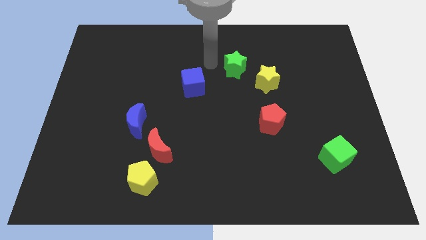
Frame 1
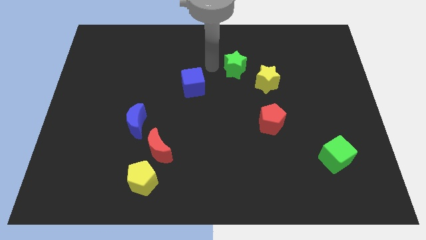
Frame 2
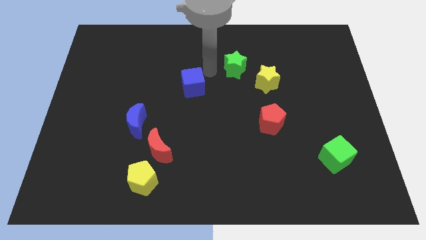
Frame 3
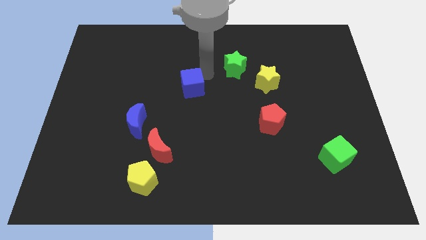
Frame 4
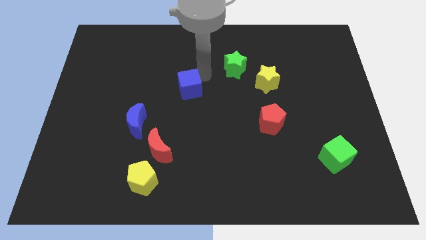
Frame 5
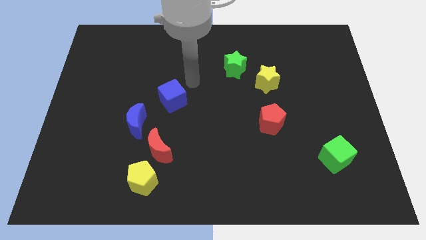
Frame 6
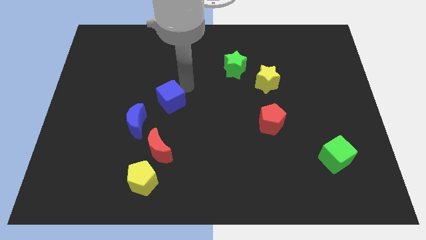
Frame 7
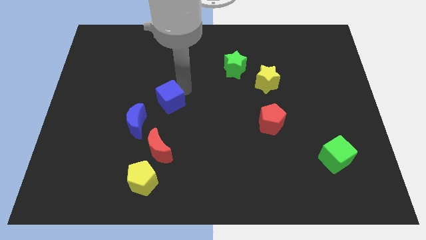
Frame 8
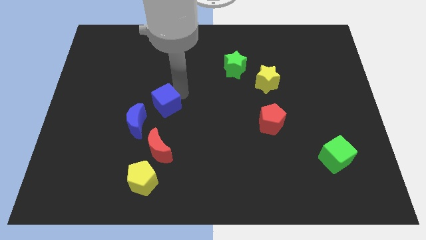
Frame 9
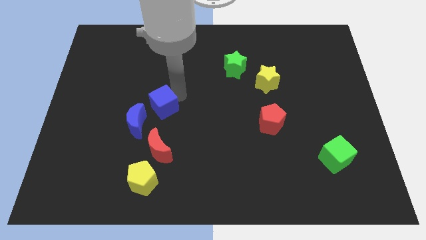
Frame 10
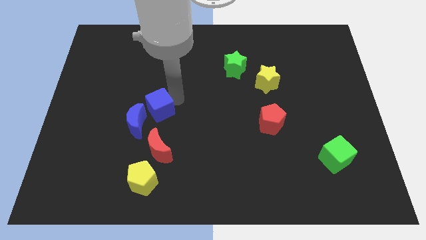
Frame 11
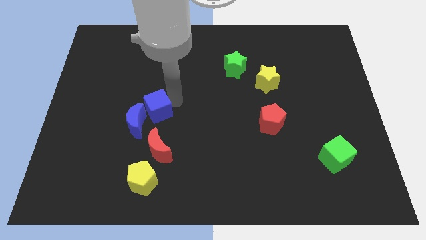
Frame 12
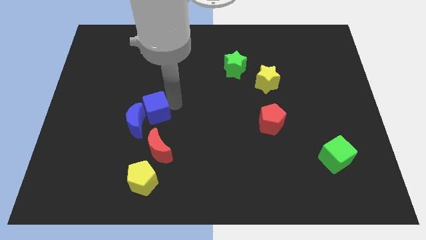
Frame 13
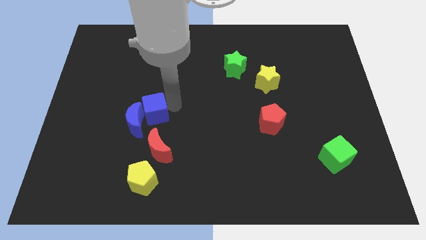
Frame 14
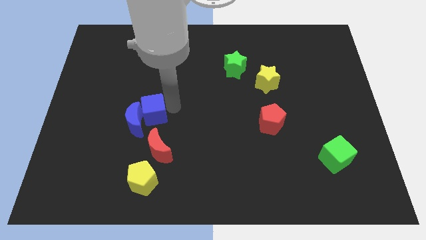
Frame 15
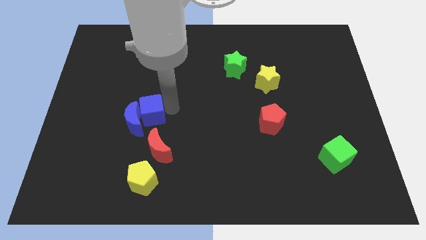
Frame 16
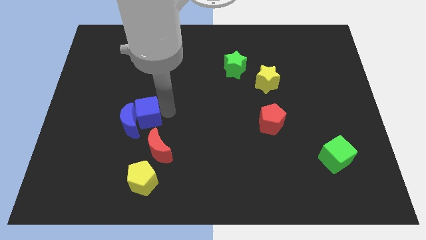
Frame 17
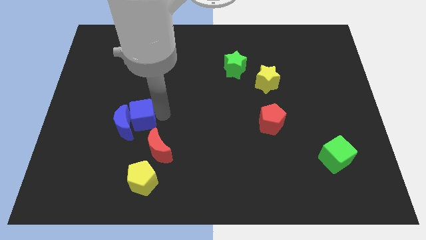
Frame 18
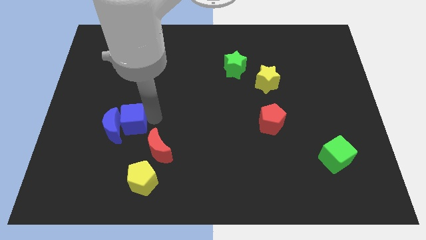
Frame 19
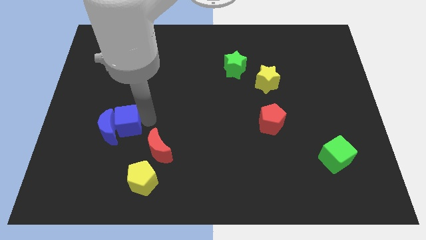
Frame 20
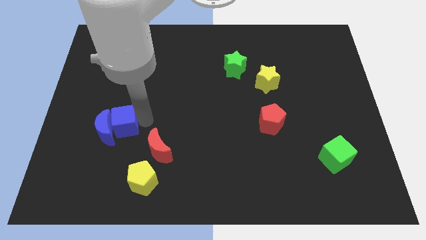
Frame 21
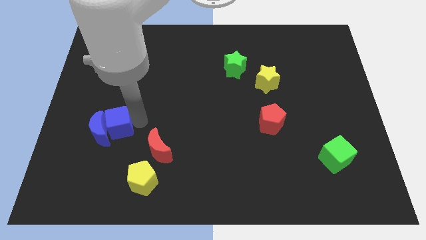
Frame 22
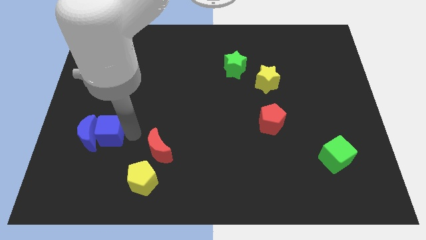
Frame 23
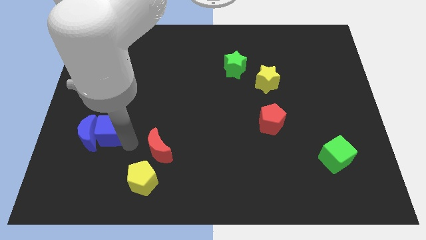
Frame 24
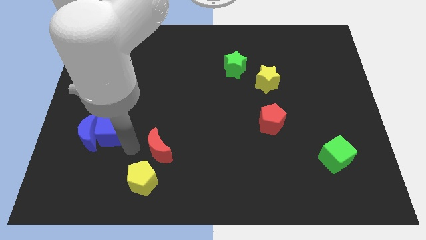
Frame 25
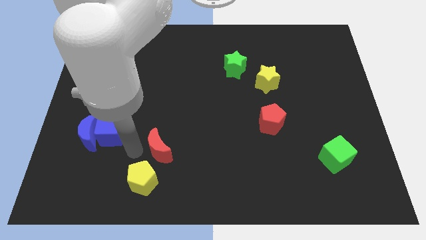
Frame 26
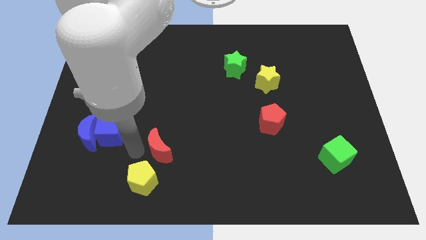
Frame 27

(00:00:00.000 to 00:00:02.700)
push the blue cube into the blue crescent

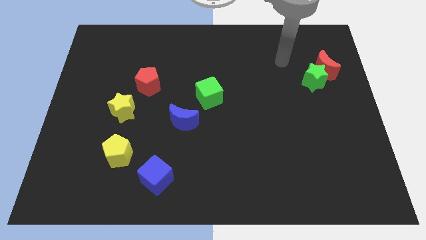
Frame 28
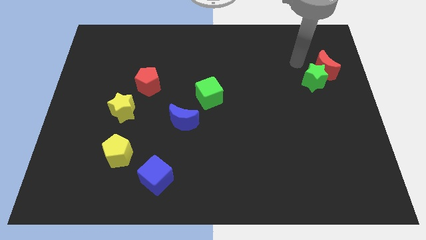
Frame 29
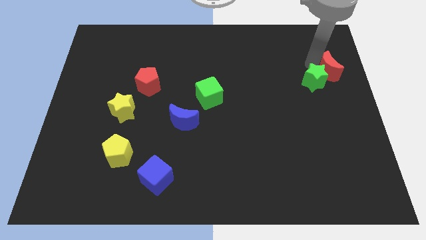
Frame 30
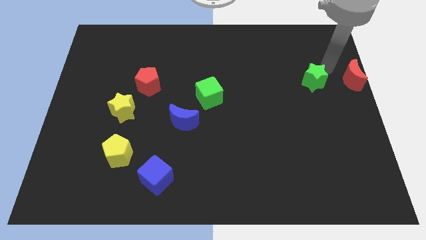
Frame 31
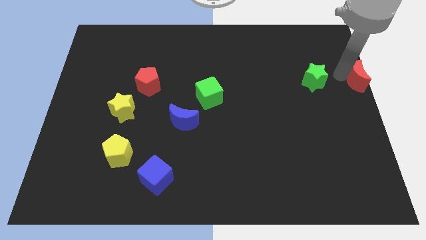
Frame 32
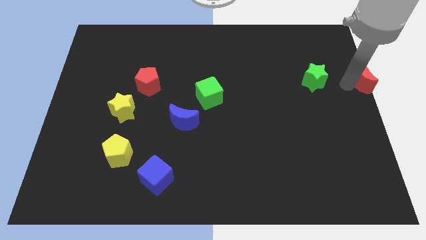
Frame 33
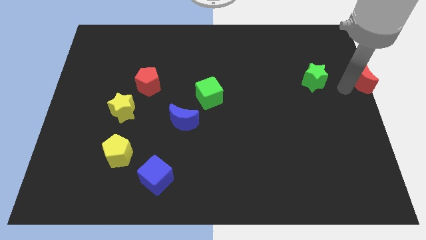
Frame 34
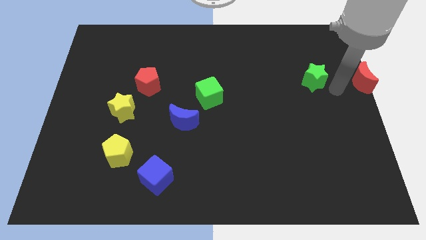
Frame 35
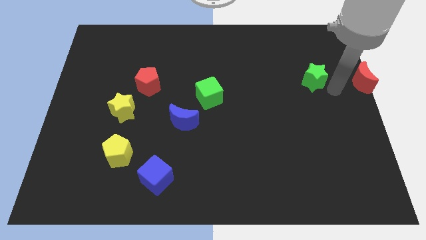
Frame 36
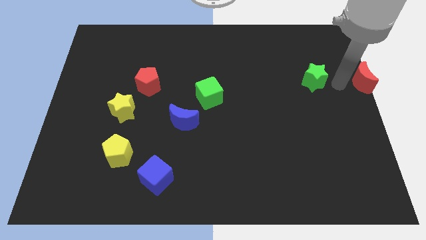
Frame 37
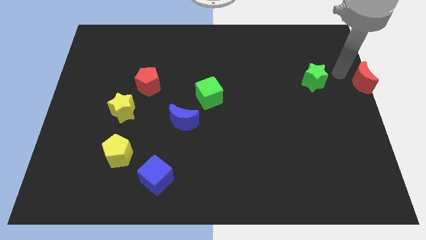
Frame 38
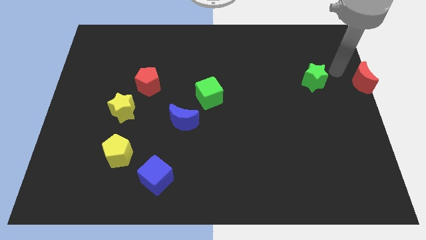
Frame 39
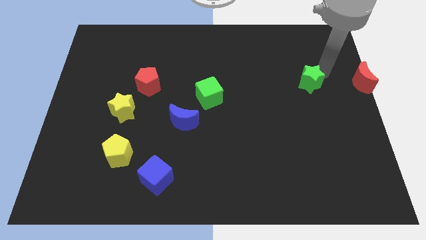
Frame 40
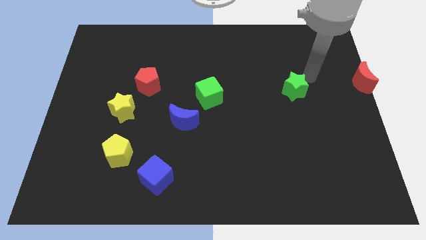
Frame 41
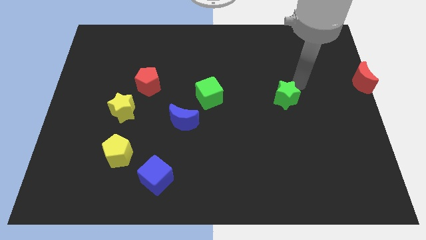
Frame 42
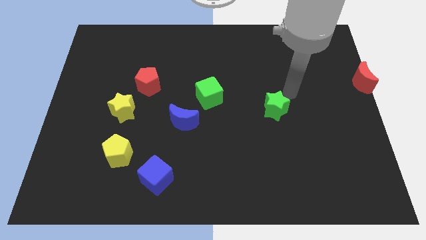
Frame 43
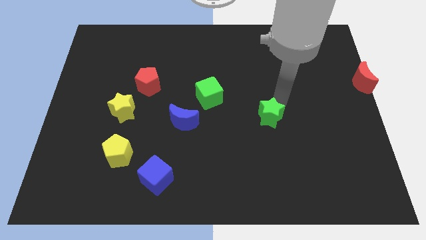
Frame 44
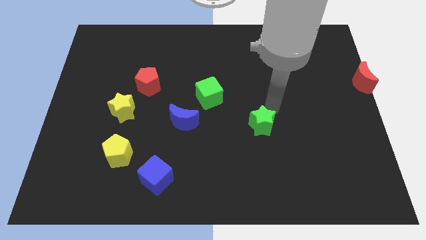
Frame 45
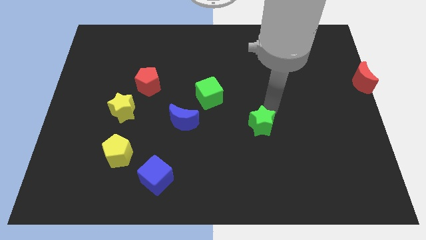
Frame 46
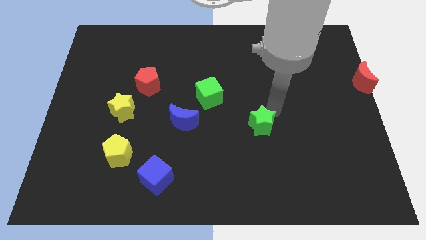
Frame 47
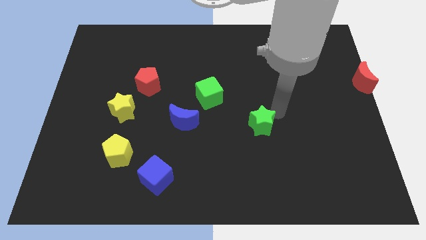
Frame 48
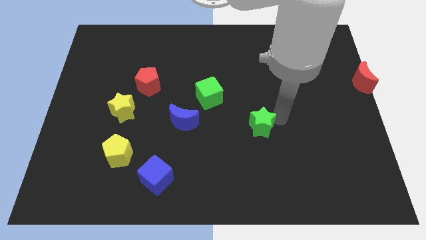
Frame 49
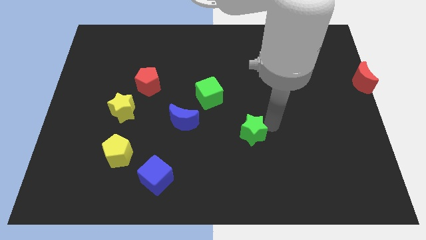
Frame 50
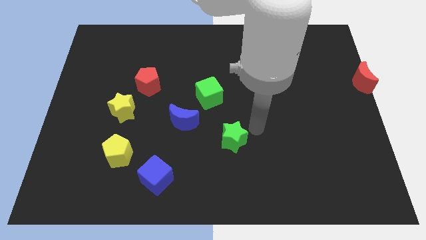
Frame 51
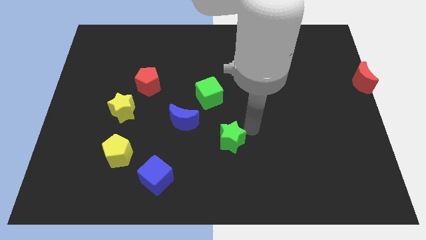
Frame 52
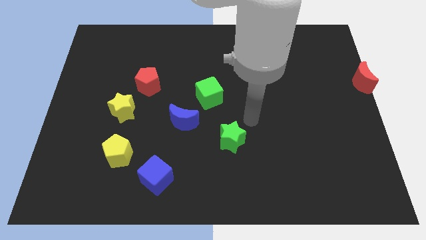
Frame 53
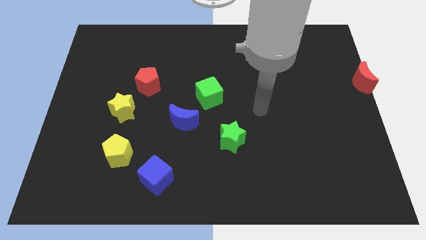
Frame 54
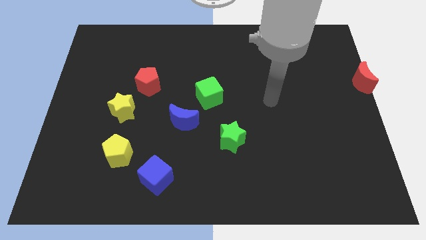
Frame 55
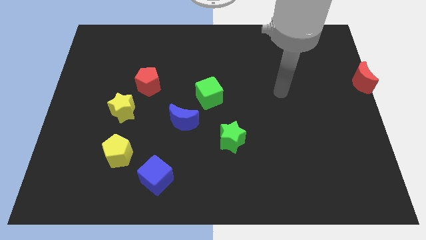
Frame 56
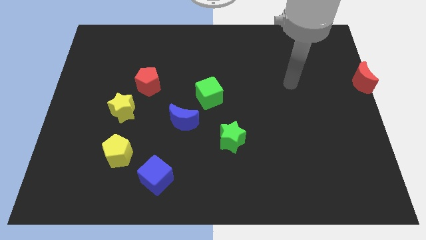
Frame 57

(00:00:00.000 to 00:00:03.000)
separate green star from red moon

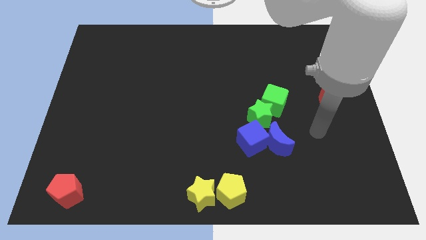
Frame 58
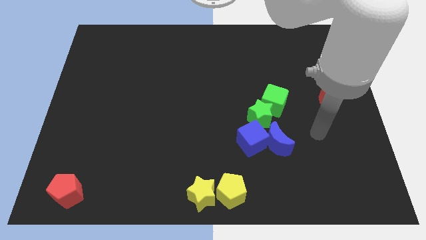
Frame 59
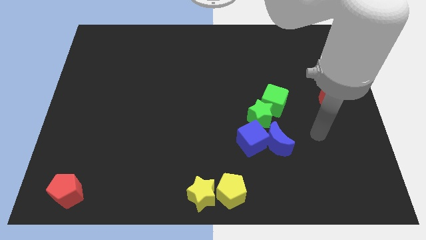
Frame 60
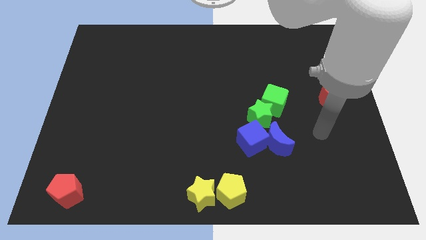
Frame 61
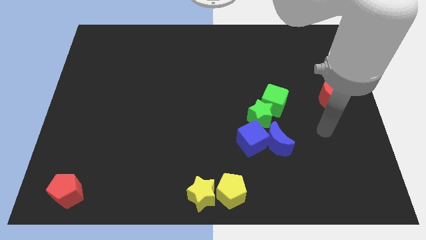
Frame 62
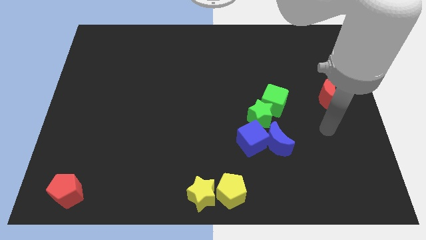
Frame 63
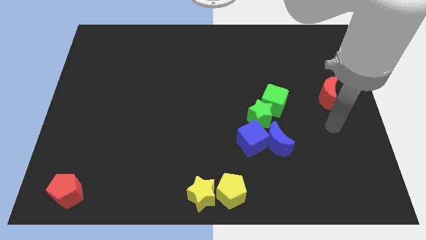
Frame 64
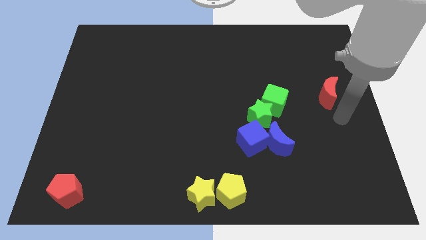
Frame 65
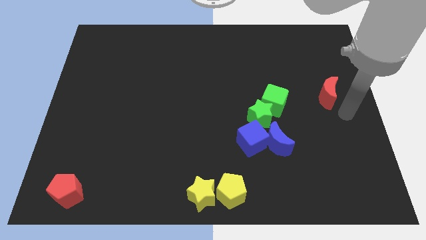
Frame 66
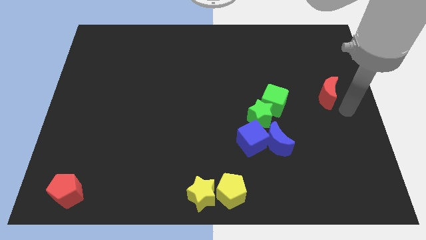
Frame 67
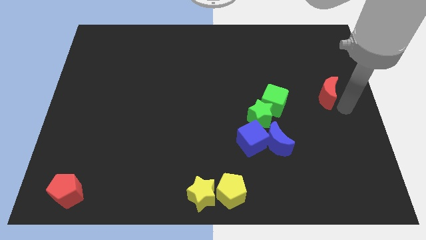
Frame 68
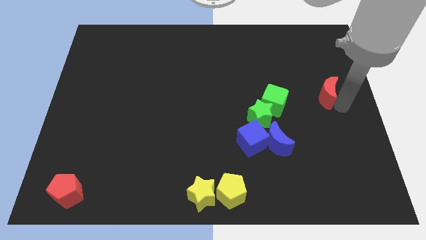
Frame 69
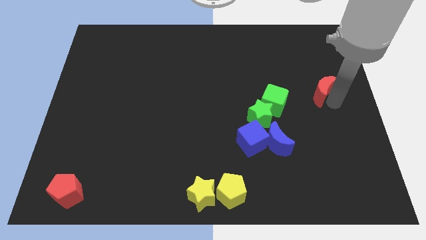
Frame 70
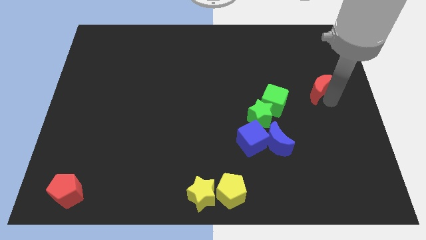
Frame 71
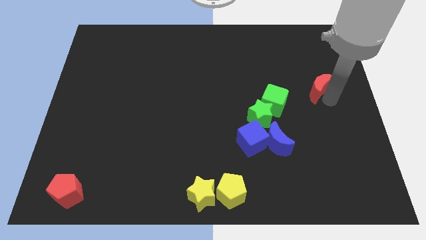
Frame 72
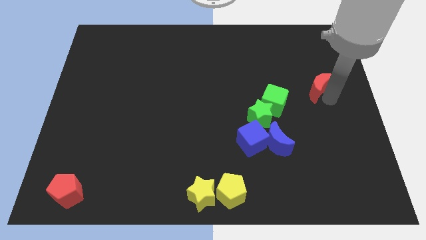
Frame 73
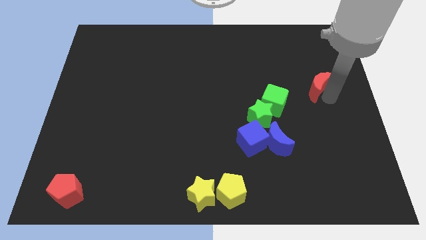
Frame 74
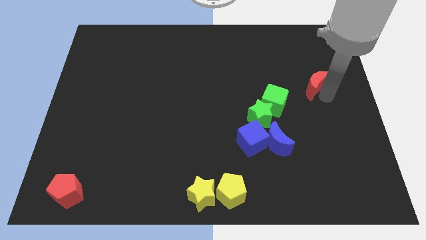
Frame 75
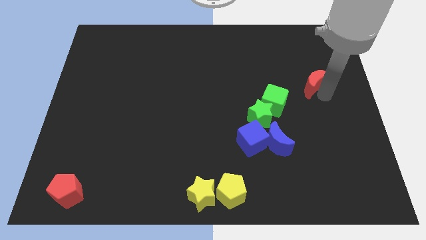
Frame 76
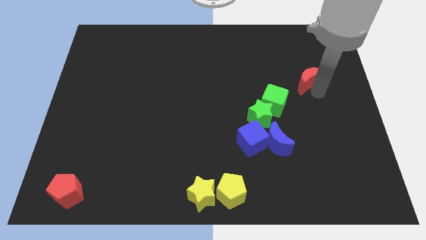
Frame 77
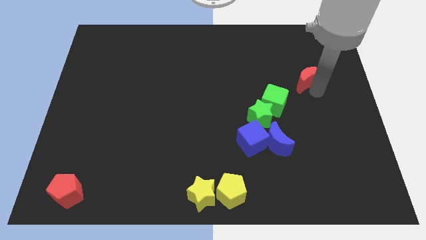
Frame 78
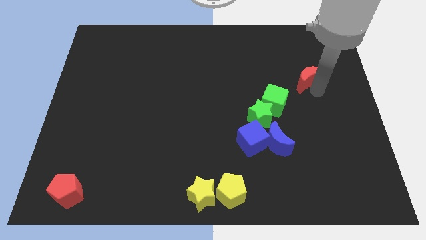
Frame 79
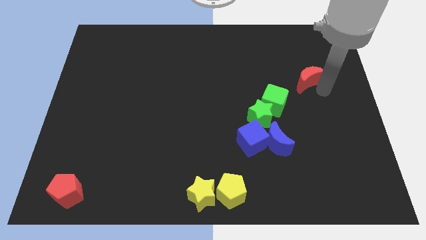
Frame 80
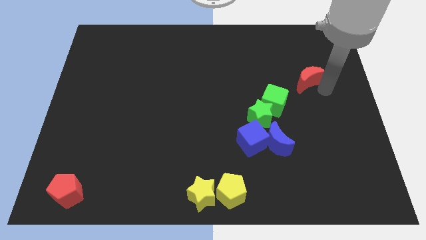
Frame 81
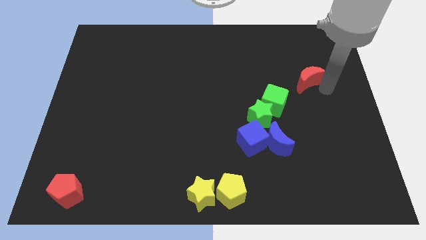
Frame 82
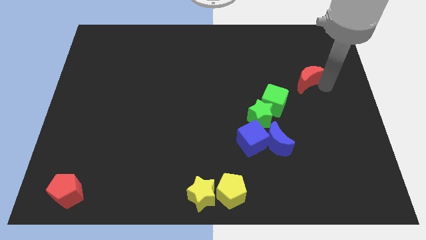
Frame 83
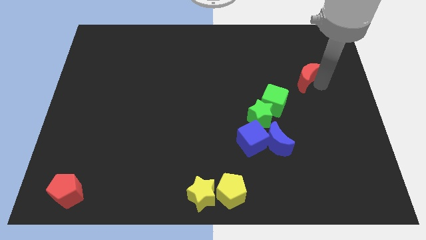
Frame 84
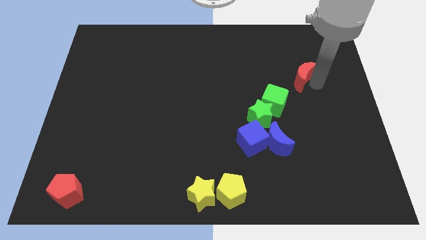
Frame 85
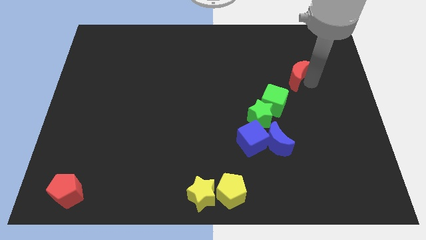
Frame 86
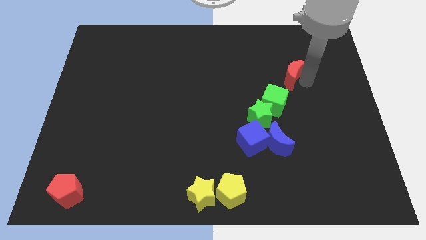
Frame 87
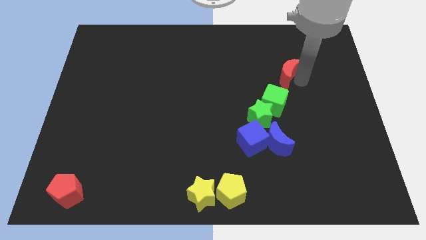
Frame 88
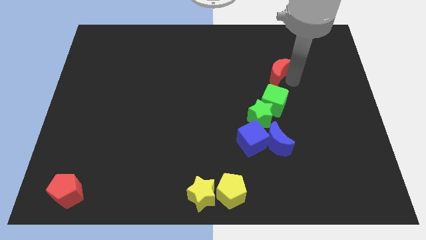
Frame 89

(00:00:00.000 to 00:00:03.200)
move the red moon above to the green cube
